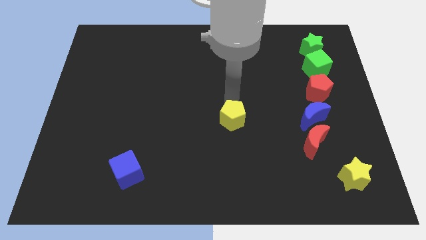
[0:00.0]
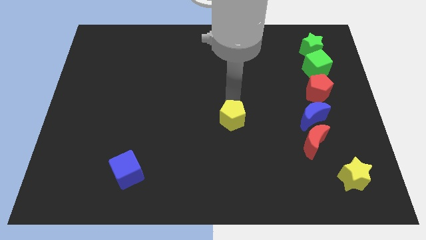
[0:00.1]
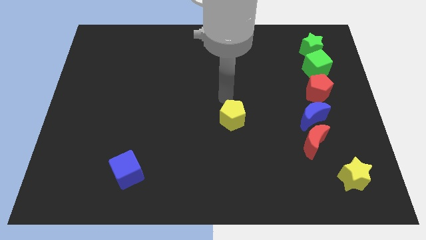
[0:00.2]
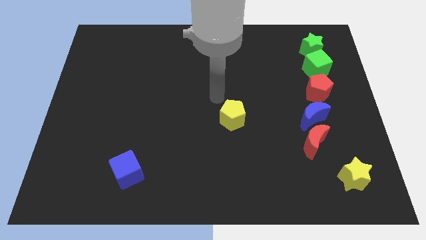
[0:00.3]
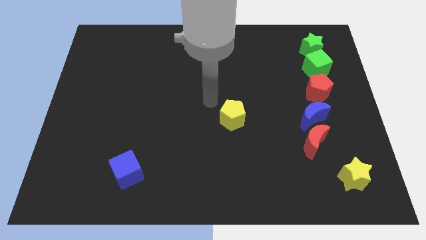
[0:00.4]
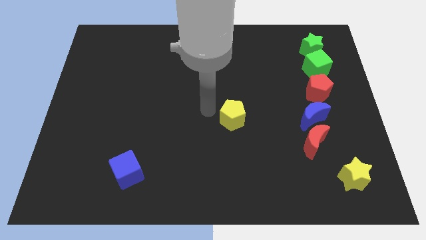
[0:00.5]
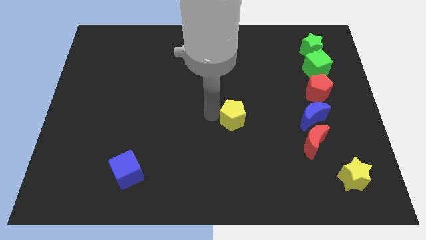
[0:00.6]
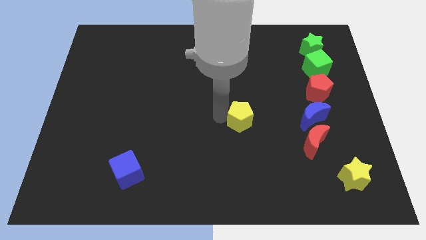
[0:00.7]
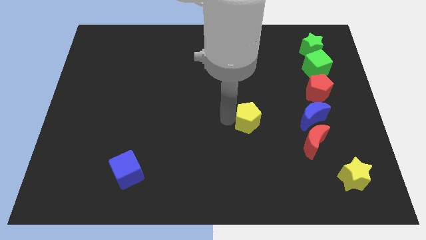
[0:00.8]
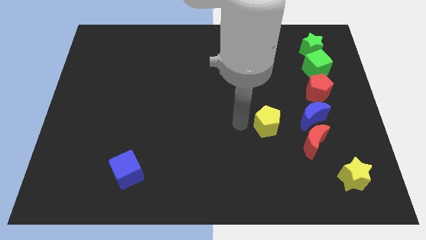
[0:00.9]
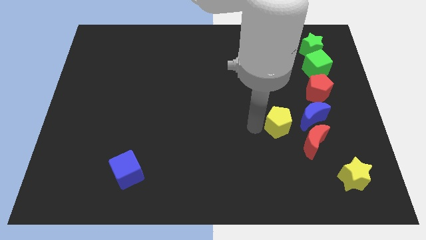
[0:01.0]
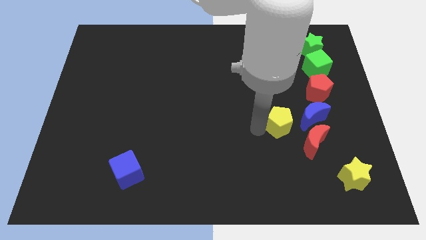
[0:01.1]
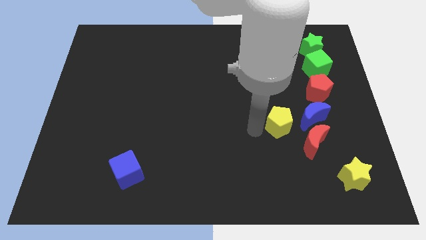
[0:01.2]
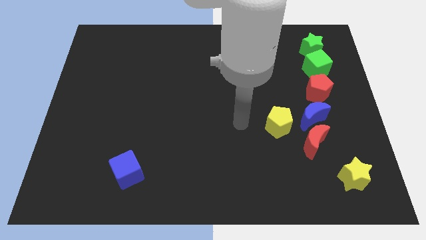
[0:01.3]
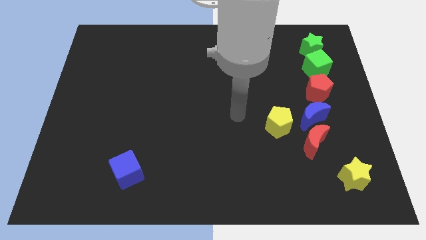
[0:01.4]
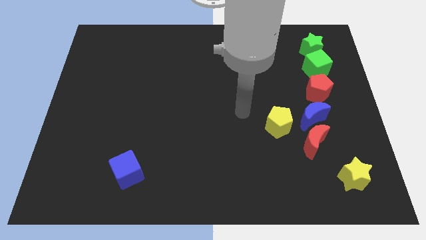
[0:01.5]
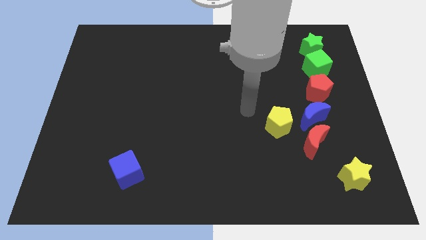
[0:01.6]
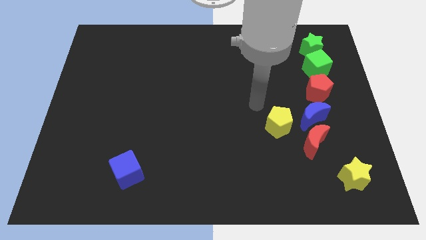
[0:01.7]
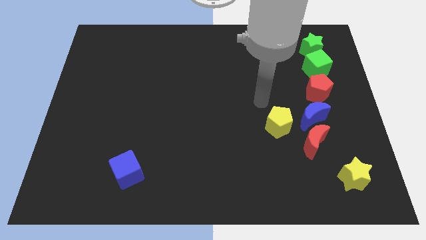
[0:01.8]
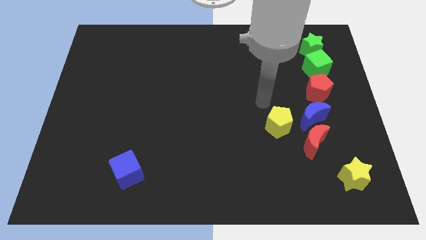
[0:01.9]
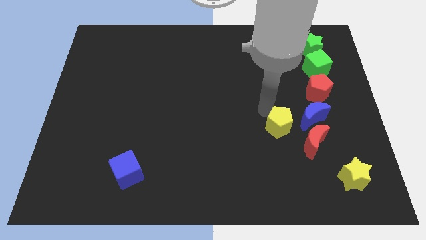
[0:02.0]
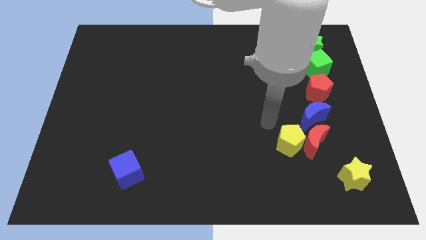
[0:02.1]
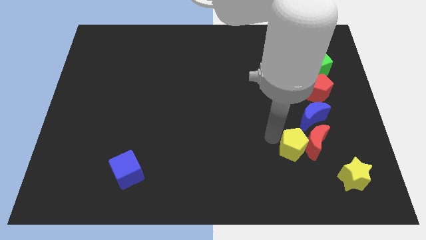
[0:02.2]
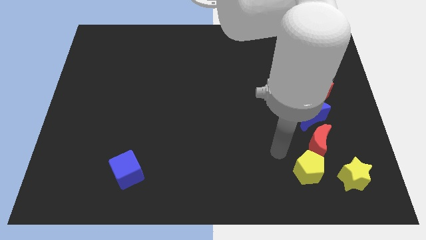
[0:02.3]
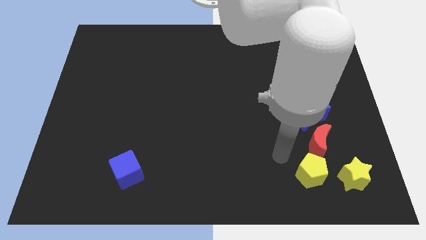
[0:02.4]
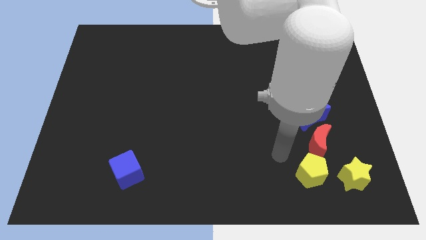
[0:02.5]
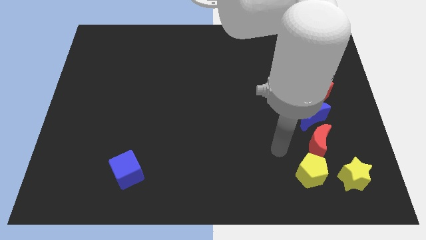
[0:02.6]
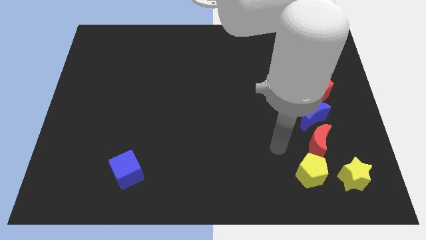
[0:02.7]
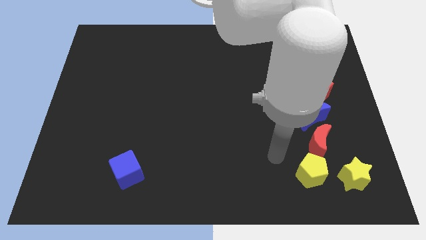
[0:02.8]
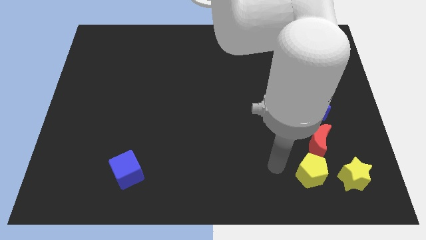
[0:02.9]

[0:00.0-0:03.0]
push the yellow pentagon into the red crescent

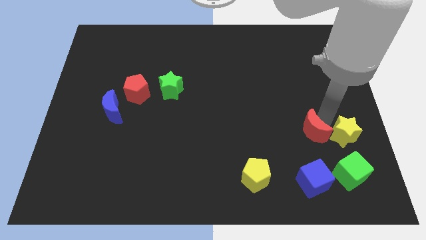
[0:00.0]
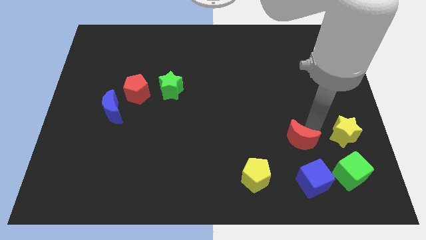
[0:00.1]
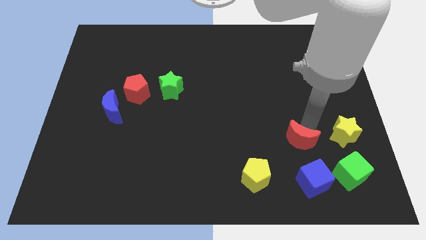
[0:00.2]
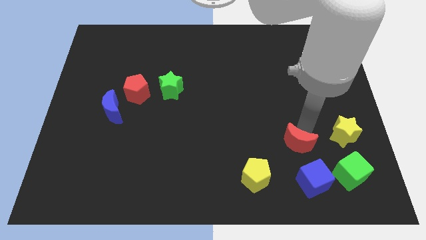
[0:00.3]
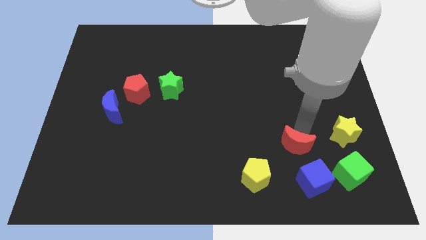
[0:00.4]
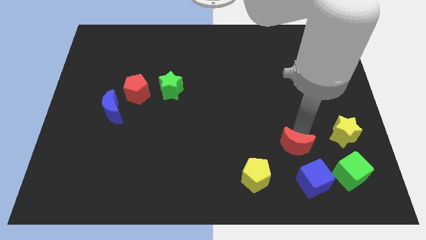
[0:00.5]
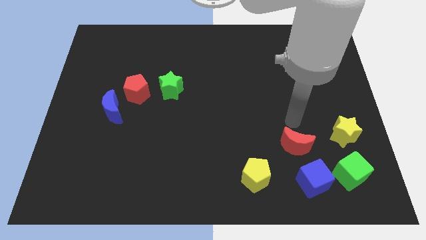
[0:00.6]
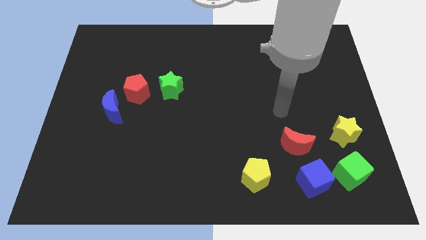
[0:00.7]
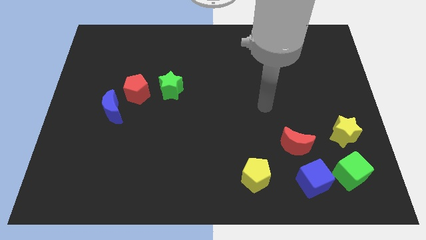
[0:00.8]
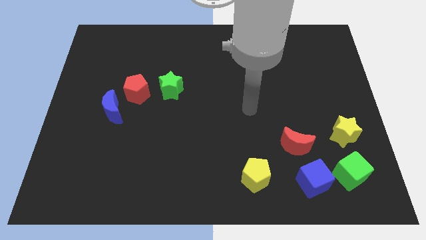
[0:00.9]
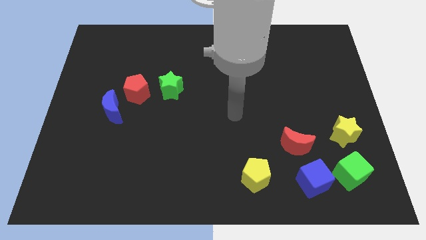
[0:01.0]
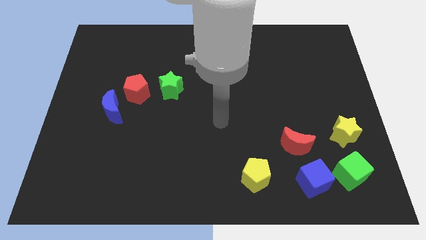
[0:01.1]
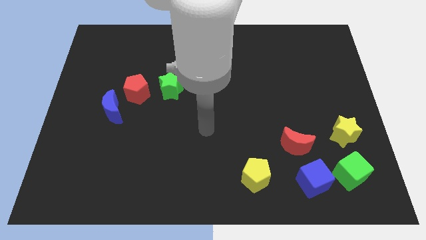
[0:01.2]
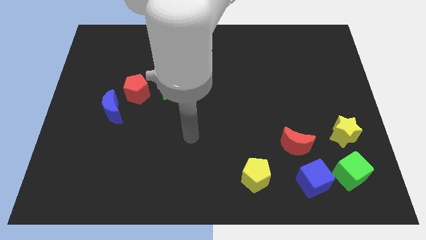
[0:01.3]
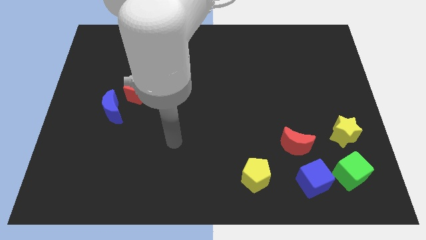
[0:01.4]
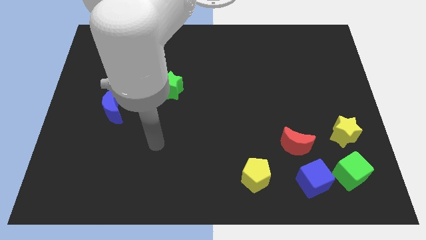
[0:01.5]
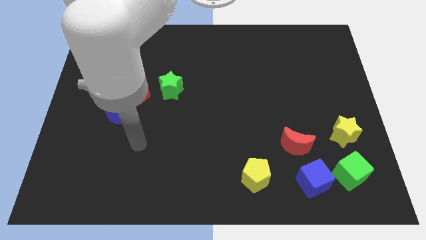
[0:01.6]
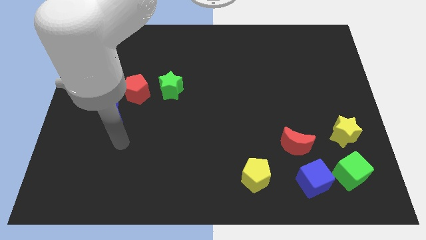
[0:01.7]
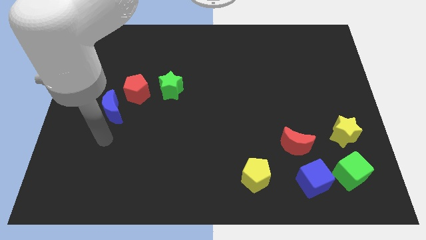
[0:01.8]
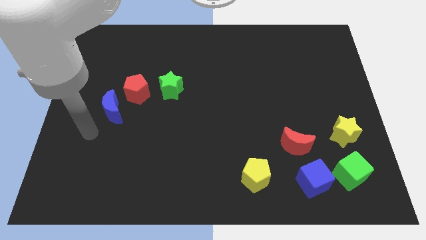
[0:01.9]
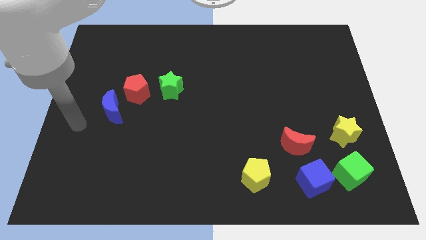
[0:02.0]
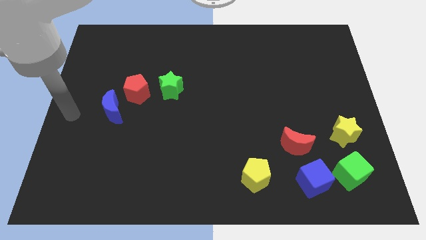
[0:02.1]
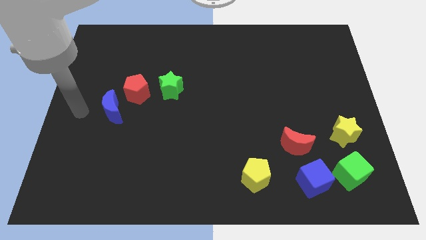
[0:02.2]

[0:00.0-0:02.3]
place the red moon above the blue cube

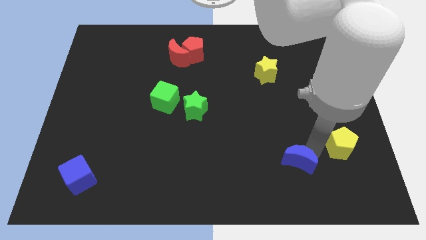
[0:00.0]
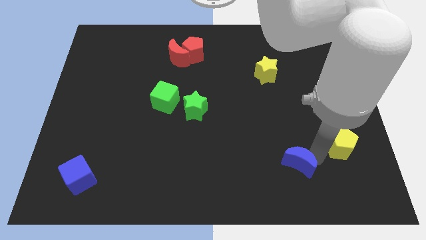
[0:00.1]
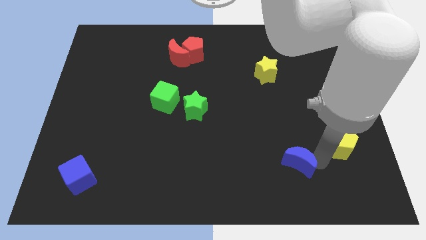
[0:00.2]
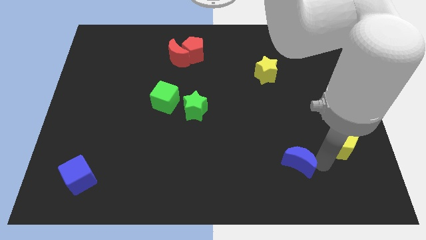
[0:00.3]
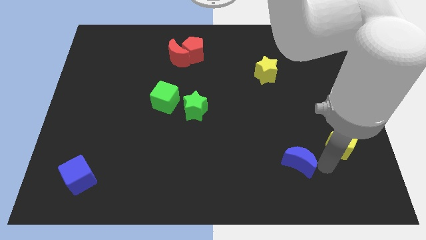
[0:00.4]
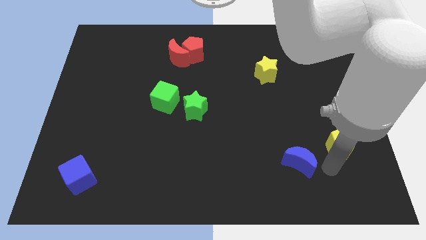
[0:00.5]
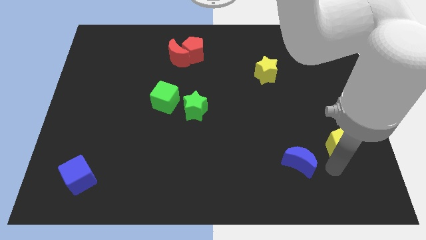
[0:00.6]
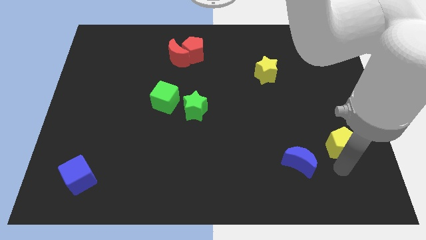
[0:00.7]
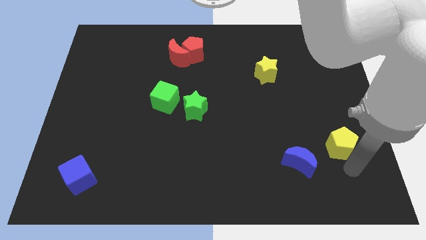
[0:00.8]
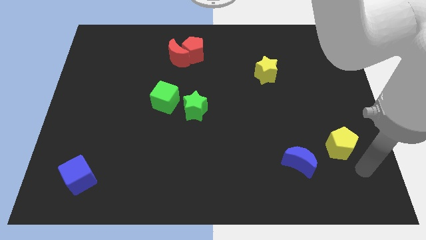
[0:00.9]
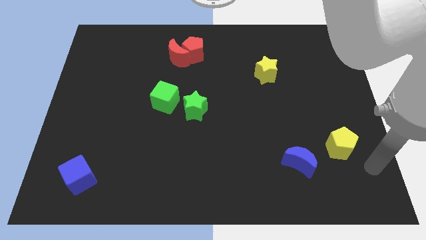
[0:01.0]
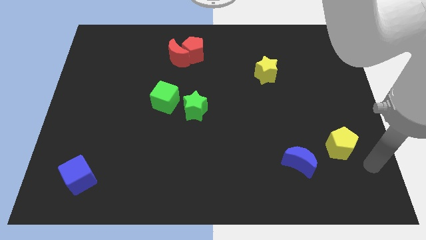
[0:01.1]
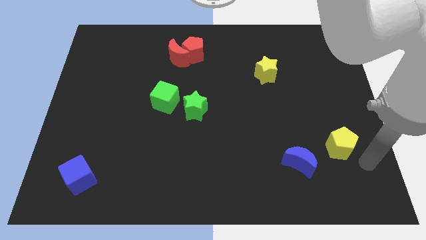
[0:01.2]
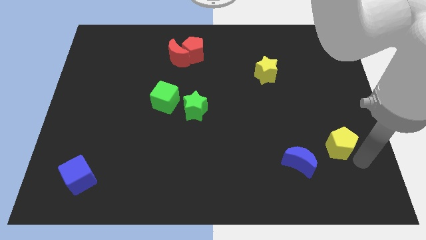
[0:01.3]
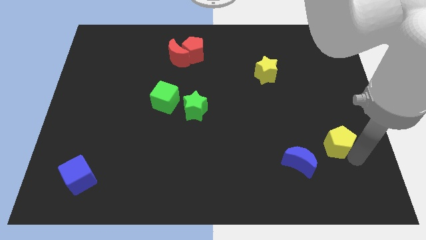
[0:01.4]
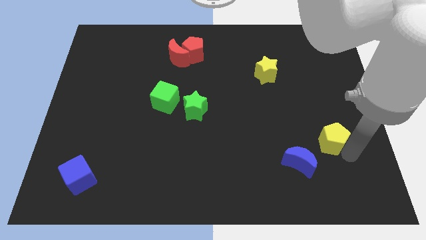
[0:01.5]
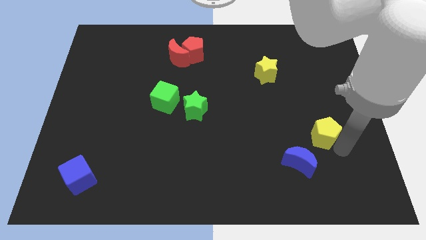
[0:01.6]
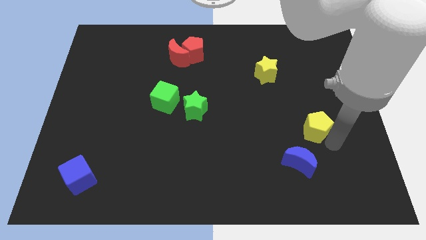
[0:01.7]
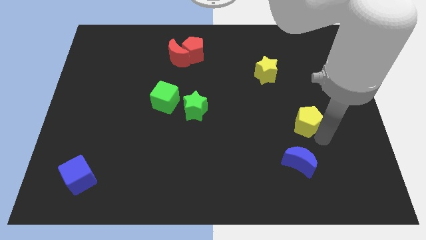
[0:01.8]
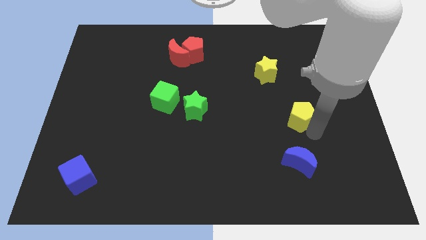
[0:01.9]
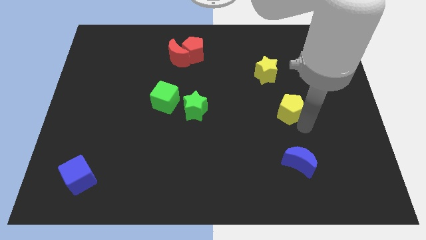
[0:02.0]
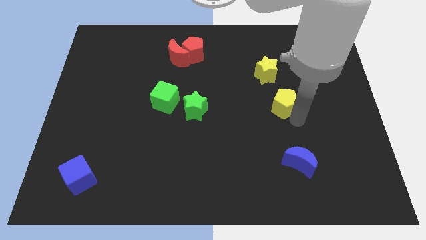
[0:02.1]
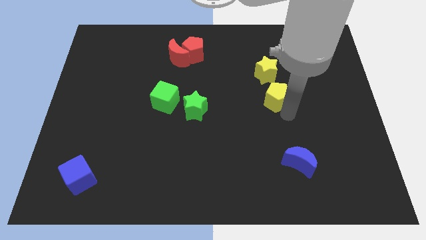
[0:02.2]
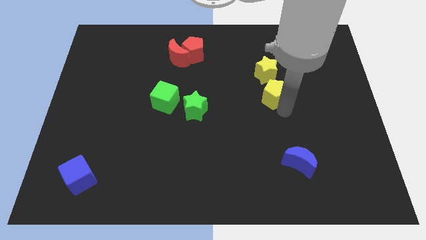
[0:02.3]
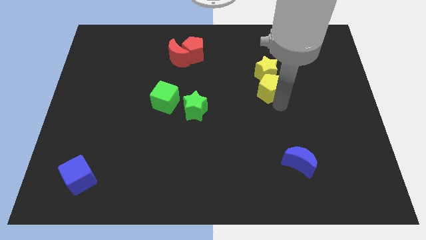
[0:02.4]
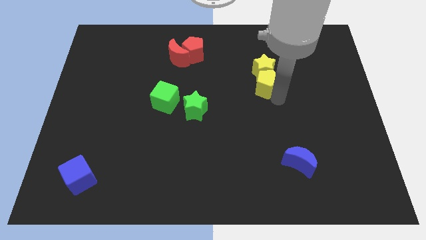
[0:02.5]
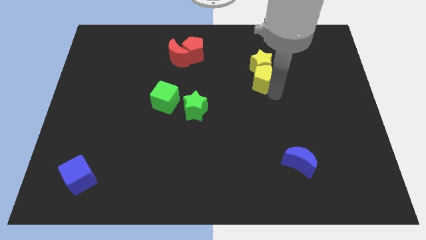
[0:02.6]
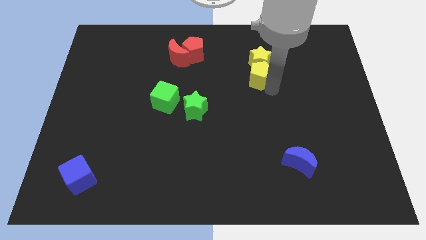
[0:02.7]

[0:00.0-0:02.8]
push the yellow pentagon into the yellow star

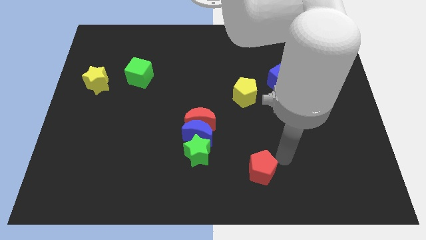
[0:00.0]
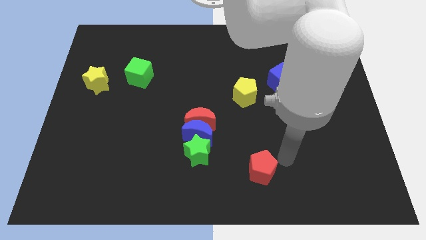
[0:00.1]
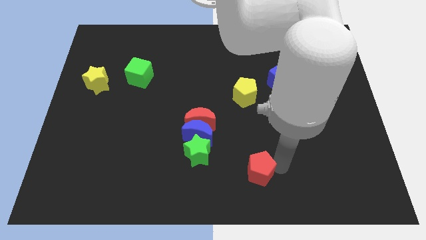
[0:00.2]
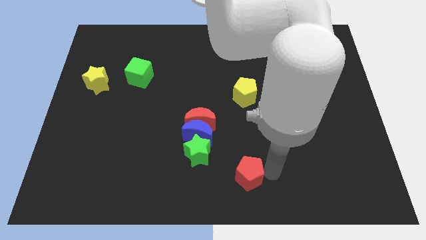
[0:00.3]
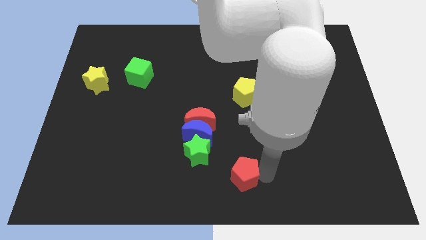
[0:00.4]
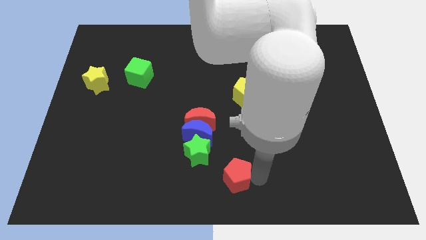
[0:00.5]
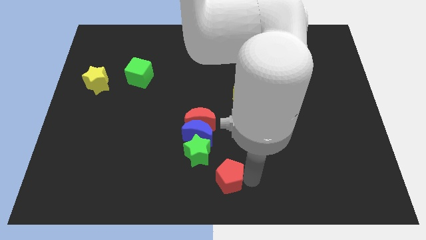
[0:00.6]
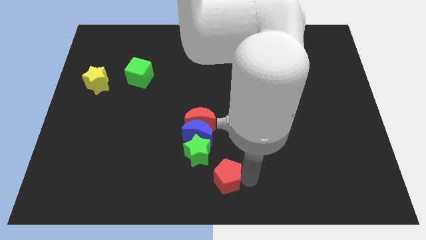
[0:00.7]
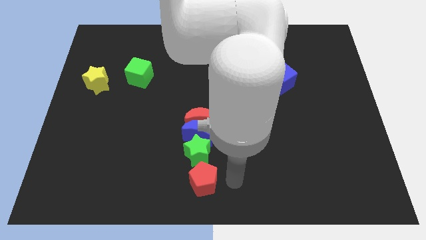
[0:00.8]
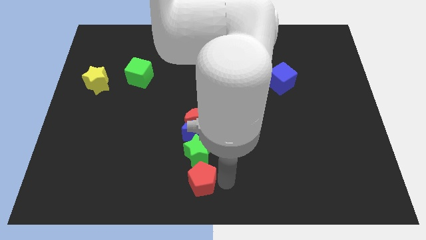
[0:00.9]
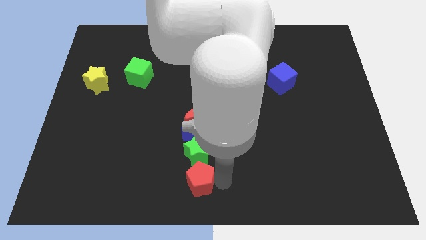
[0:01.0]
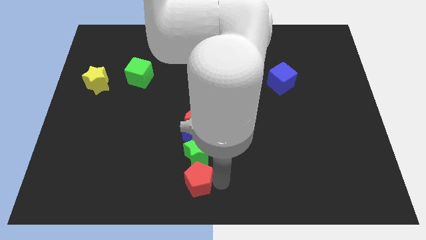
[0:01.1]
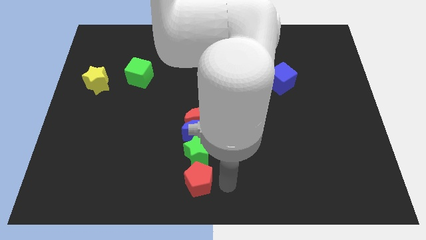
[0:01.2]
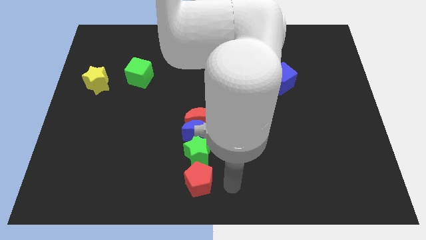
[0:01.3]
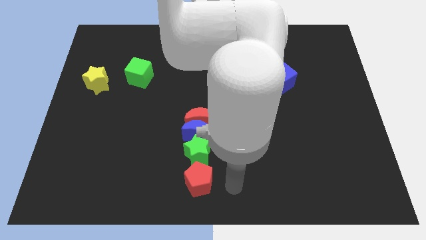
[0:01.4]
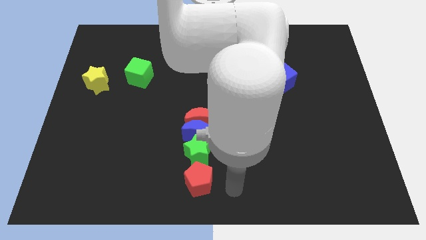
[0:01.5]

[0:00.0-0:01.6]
place the red pentagon vertically below the green star
